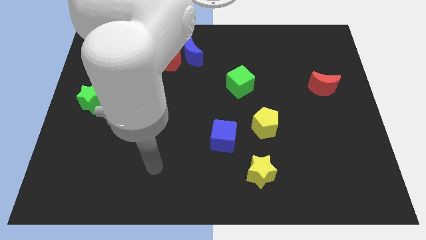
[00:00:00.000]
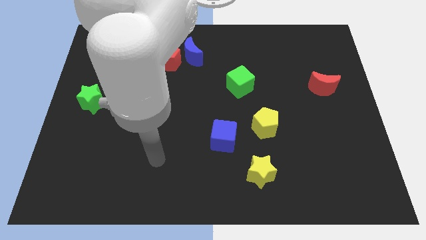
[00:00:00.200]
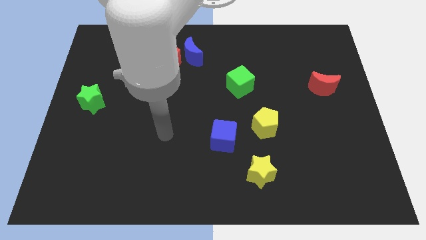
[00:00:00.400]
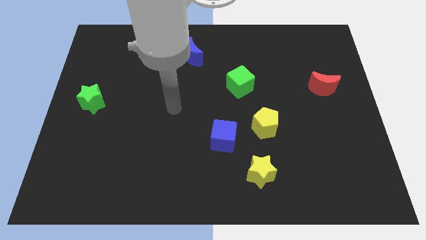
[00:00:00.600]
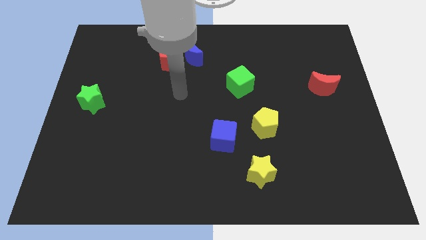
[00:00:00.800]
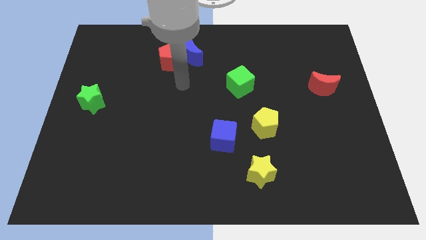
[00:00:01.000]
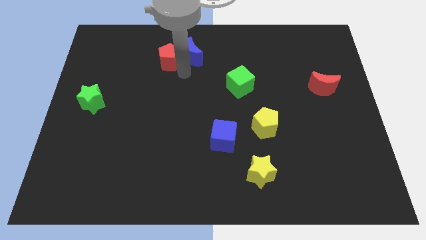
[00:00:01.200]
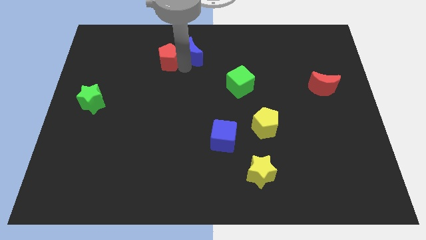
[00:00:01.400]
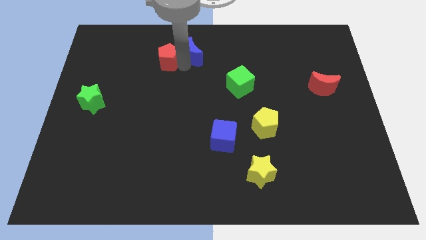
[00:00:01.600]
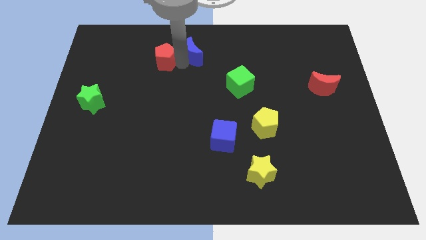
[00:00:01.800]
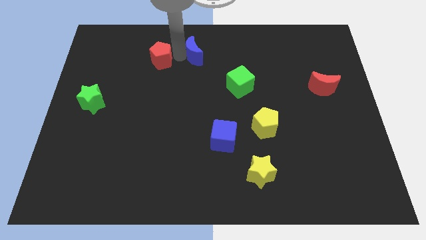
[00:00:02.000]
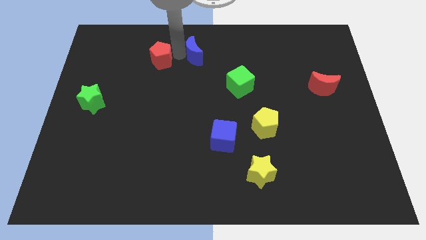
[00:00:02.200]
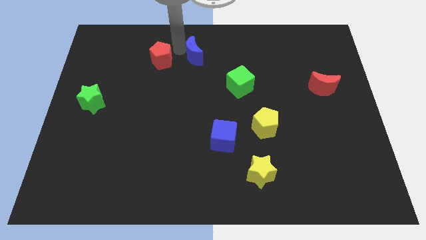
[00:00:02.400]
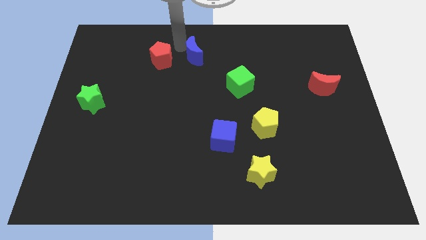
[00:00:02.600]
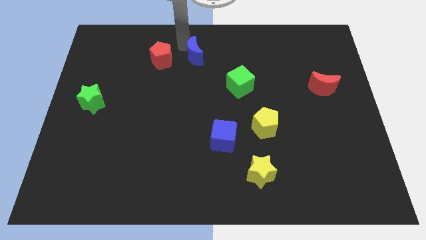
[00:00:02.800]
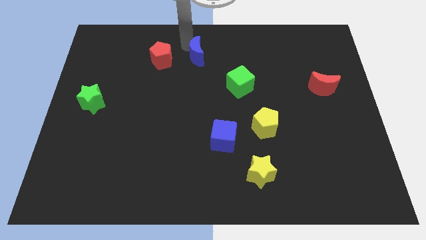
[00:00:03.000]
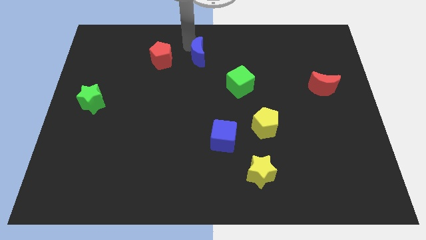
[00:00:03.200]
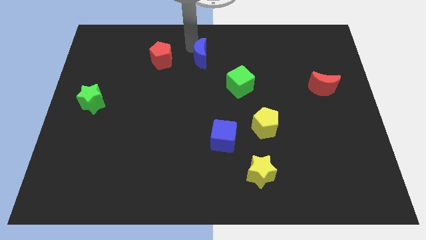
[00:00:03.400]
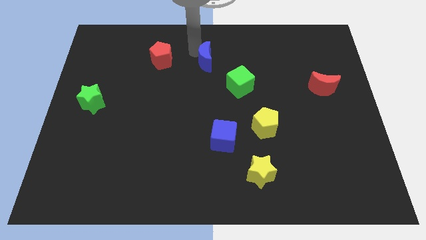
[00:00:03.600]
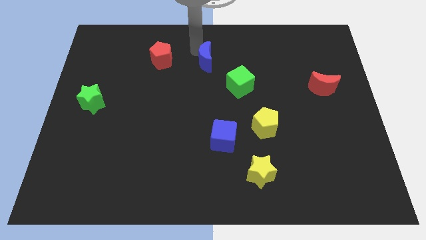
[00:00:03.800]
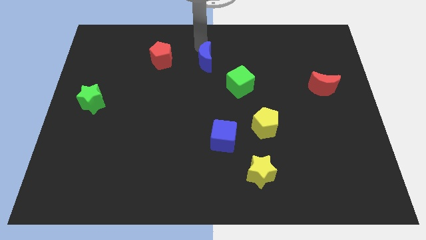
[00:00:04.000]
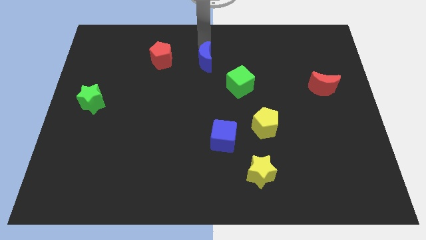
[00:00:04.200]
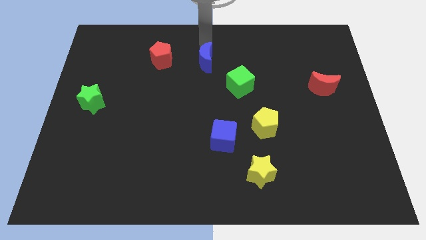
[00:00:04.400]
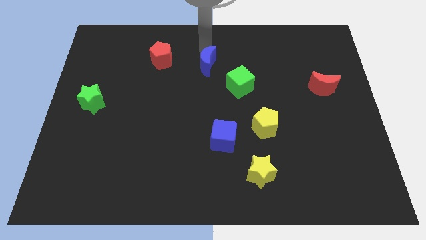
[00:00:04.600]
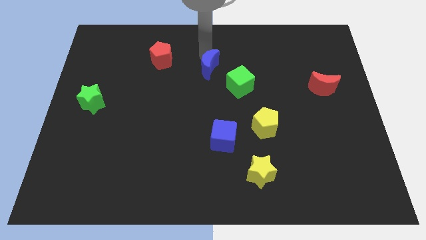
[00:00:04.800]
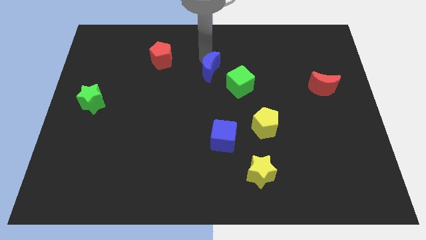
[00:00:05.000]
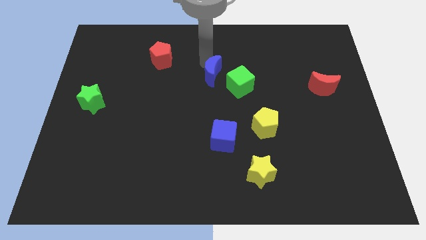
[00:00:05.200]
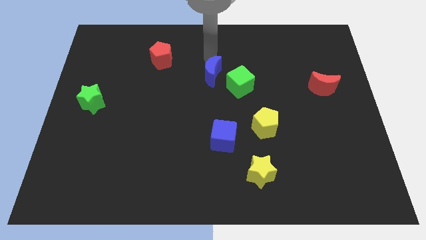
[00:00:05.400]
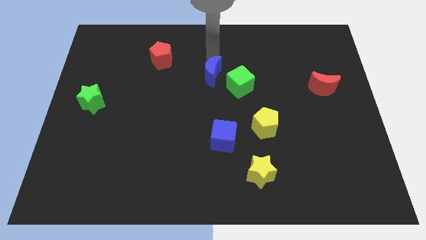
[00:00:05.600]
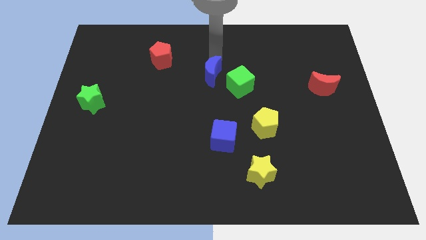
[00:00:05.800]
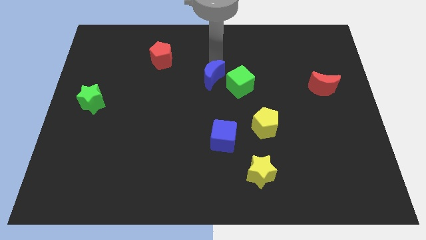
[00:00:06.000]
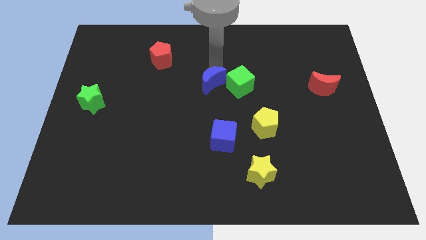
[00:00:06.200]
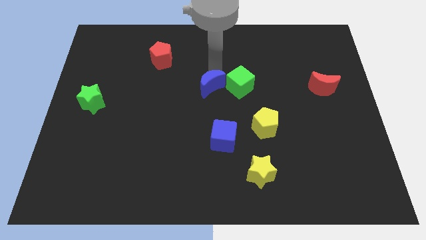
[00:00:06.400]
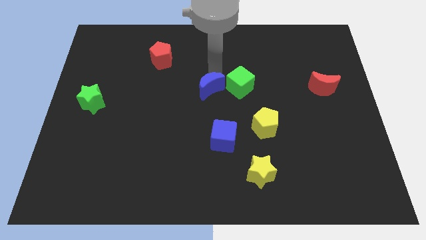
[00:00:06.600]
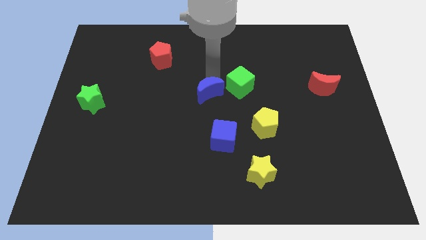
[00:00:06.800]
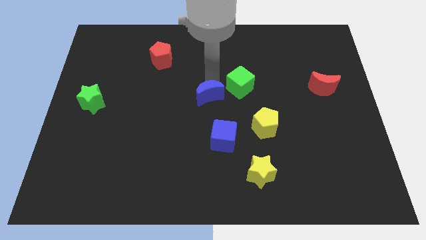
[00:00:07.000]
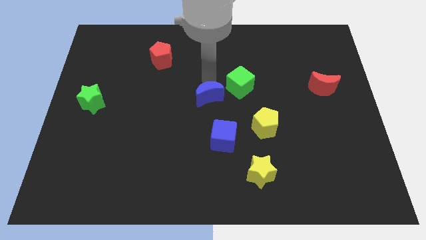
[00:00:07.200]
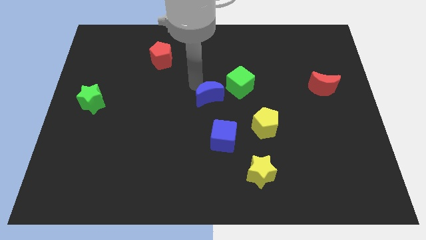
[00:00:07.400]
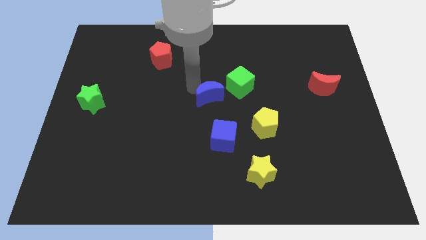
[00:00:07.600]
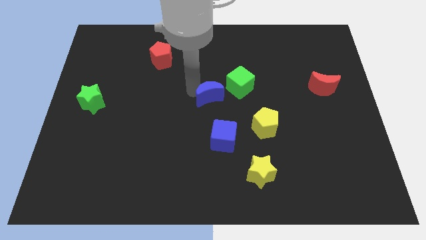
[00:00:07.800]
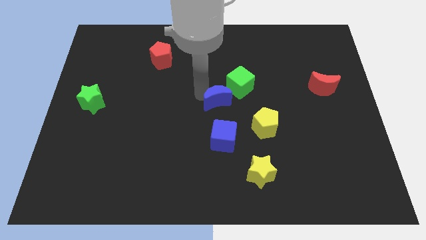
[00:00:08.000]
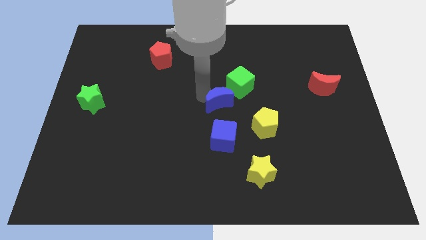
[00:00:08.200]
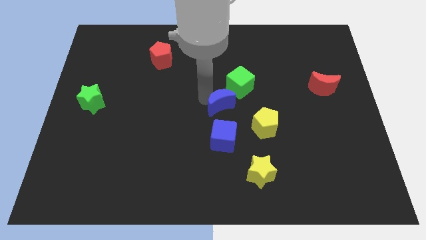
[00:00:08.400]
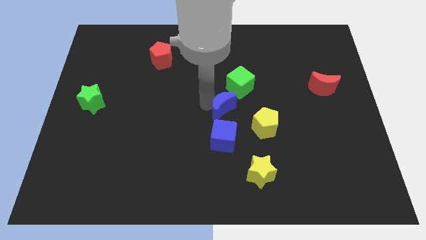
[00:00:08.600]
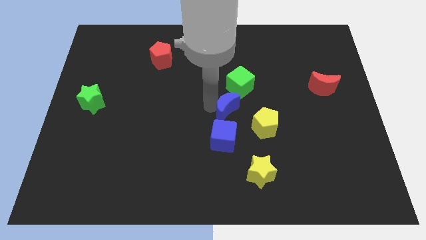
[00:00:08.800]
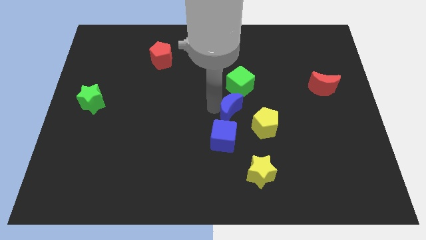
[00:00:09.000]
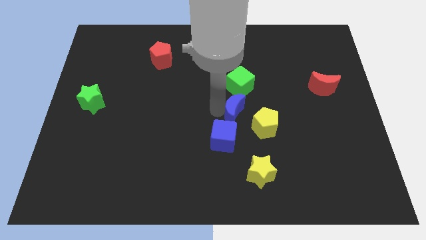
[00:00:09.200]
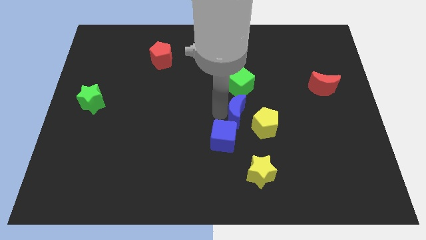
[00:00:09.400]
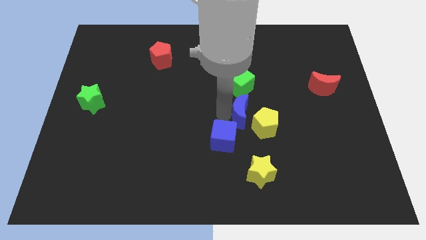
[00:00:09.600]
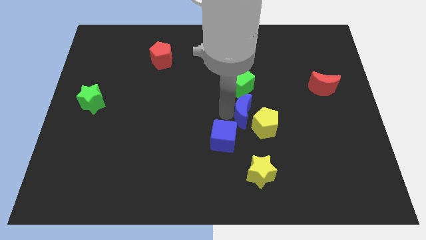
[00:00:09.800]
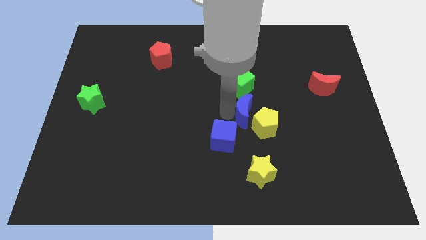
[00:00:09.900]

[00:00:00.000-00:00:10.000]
push the blue moon to the yellow pentagon

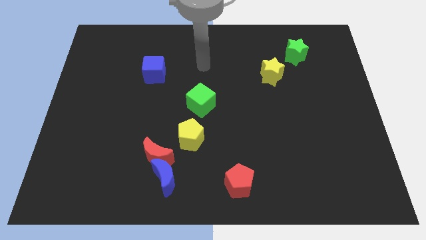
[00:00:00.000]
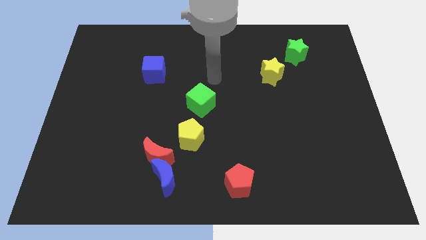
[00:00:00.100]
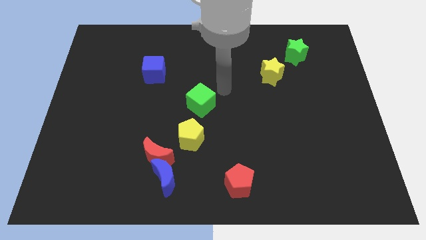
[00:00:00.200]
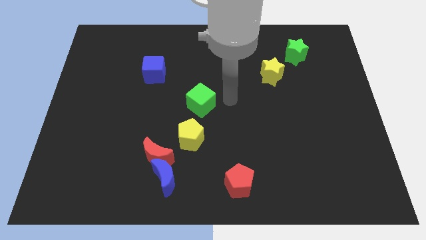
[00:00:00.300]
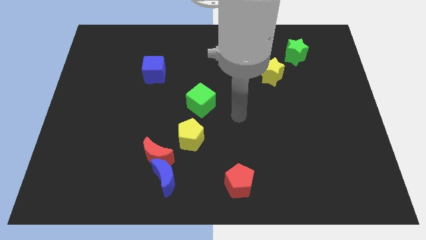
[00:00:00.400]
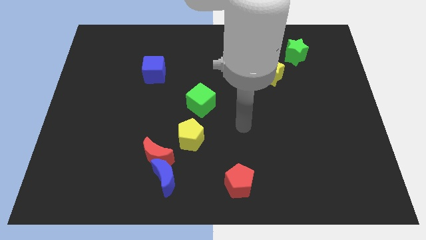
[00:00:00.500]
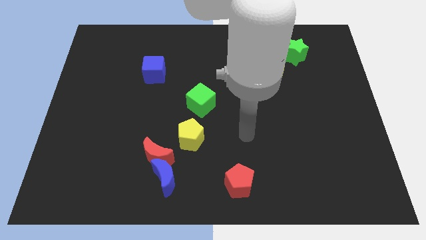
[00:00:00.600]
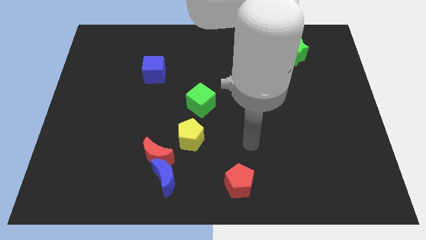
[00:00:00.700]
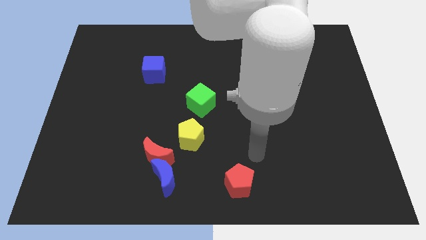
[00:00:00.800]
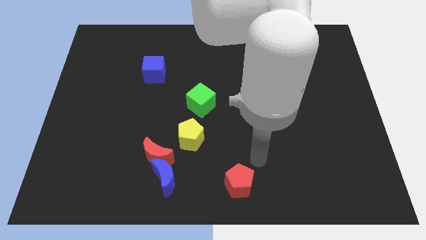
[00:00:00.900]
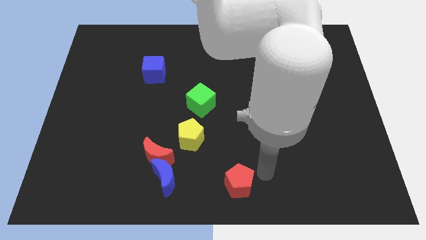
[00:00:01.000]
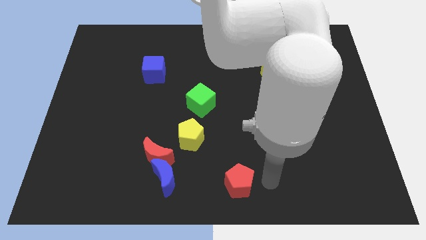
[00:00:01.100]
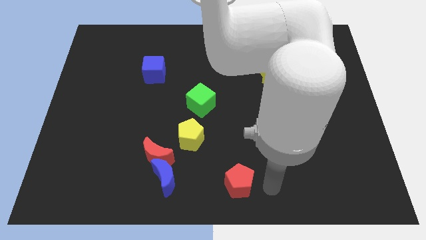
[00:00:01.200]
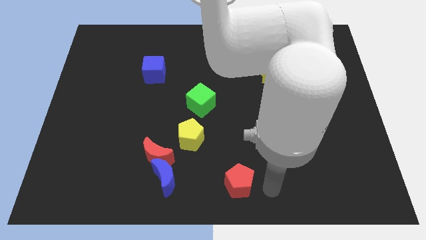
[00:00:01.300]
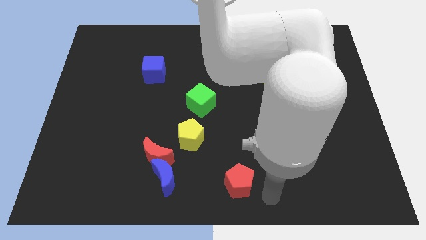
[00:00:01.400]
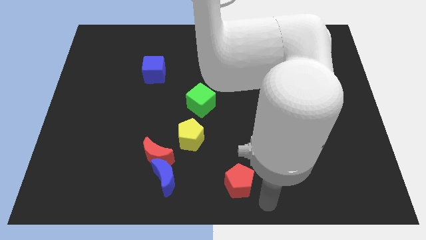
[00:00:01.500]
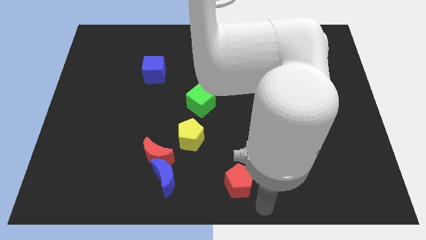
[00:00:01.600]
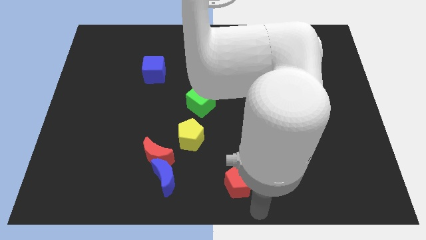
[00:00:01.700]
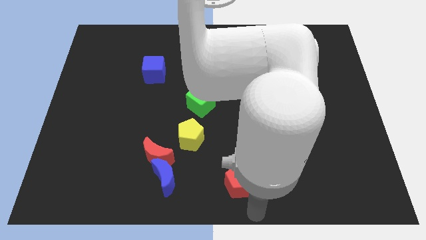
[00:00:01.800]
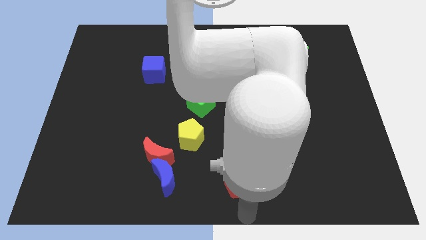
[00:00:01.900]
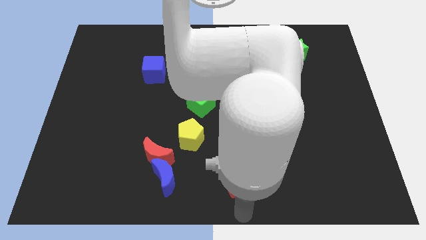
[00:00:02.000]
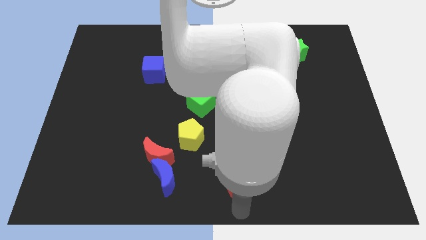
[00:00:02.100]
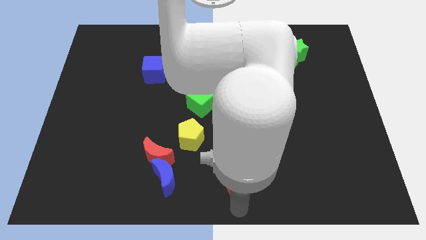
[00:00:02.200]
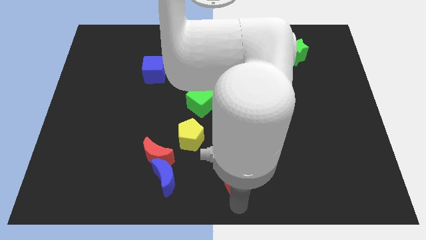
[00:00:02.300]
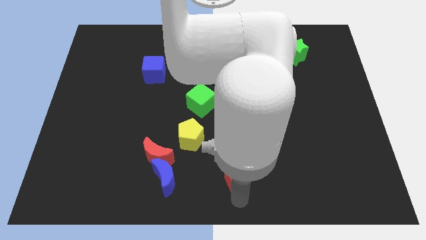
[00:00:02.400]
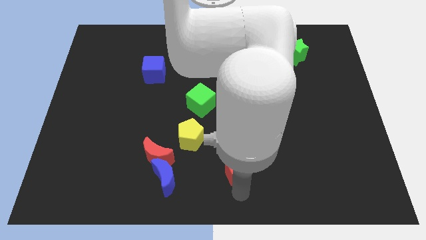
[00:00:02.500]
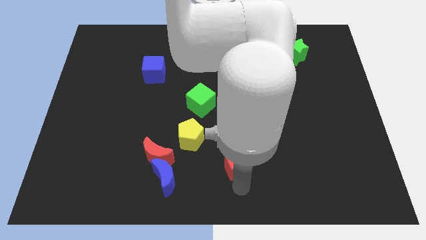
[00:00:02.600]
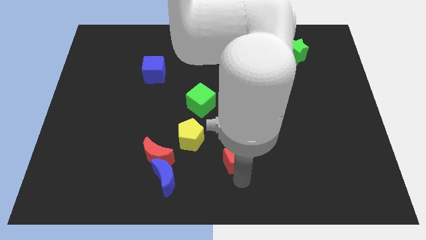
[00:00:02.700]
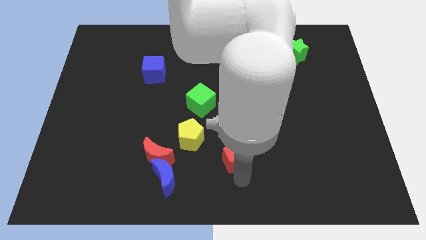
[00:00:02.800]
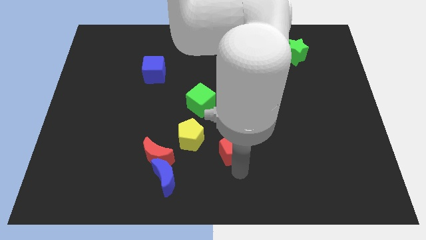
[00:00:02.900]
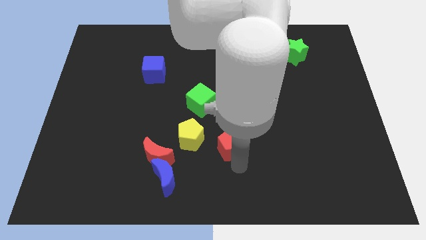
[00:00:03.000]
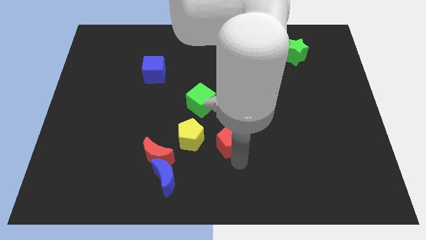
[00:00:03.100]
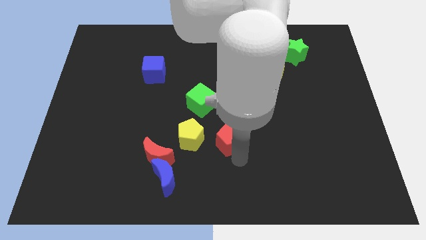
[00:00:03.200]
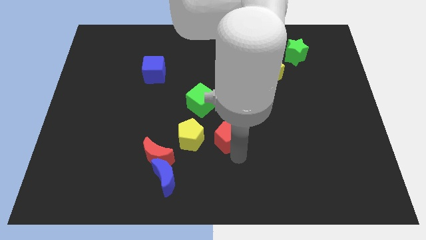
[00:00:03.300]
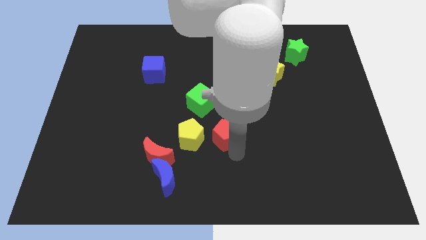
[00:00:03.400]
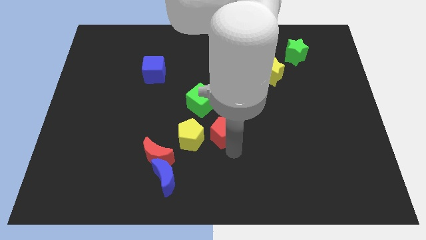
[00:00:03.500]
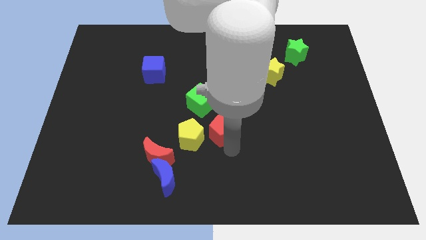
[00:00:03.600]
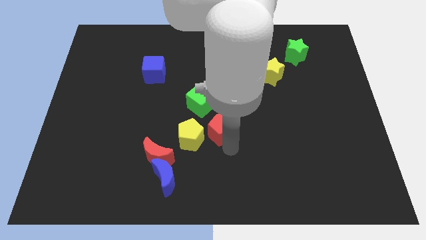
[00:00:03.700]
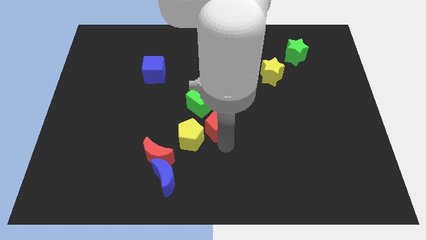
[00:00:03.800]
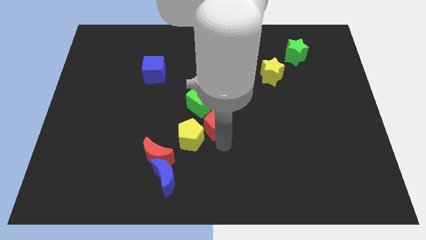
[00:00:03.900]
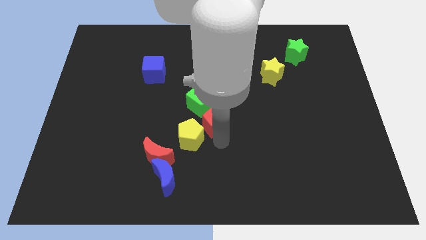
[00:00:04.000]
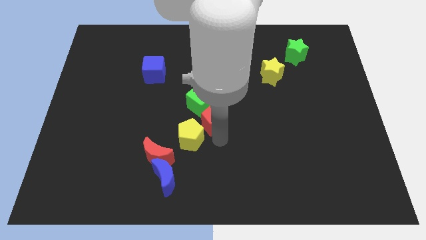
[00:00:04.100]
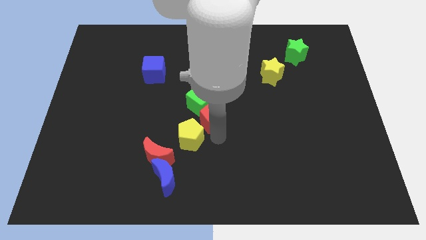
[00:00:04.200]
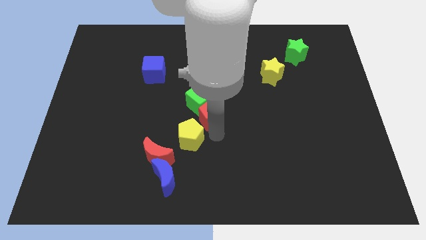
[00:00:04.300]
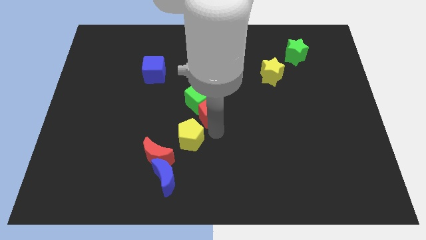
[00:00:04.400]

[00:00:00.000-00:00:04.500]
push the red pentagon to the green cube
